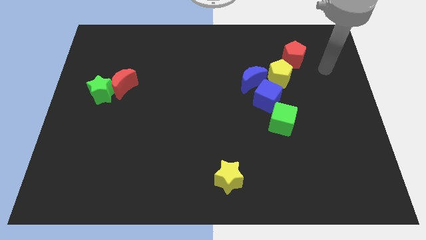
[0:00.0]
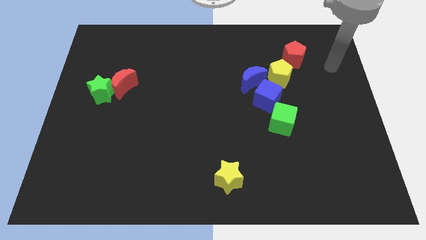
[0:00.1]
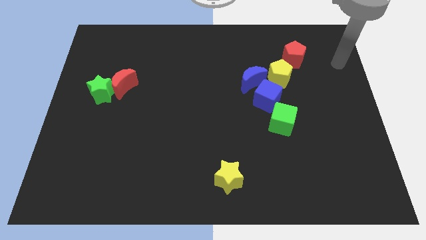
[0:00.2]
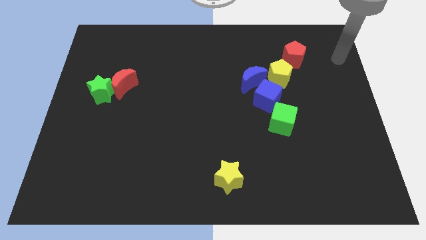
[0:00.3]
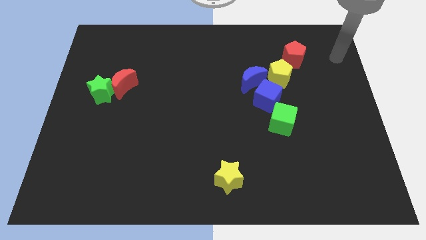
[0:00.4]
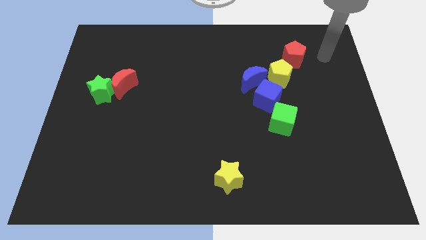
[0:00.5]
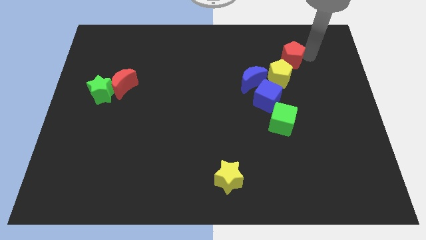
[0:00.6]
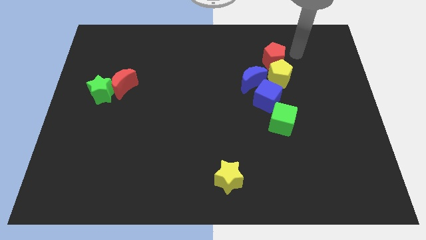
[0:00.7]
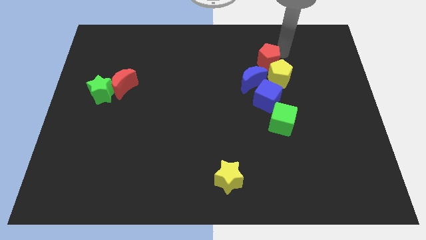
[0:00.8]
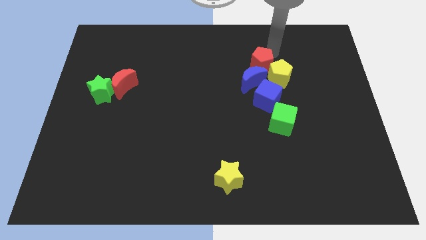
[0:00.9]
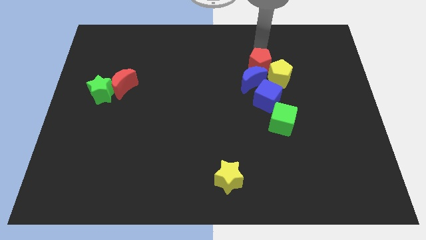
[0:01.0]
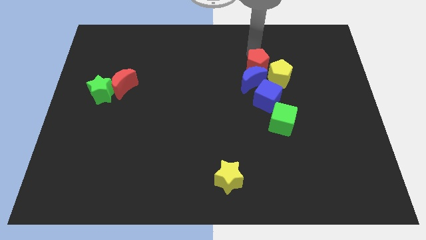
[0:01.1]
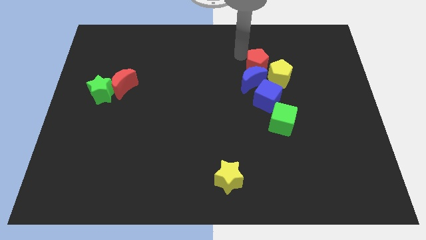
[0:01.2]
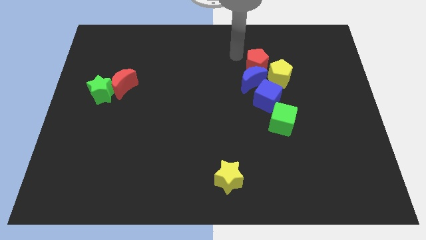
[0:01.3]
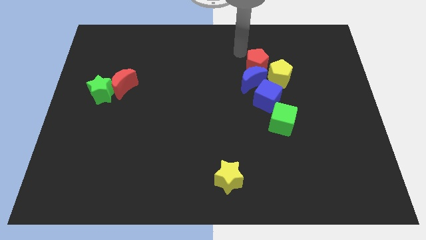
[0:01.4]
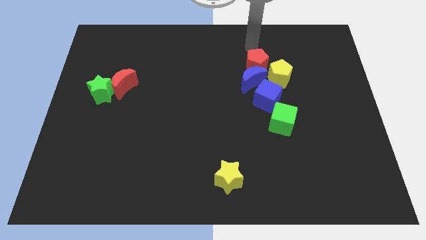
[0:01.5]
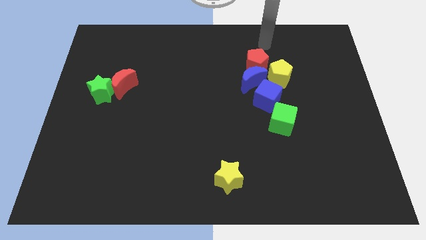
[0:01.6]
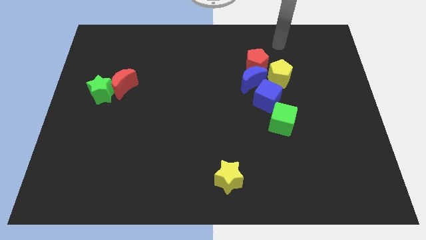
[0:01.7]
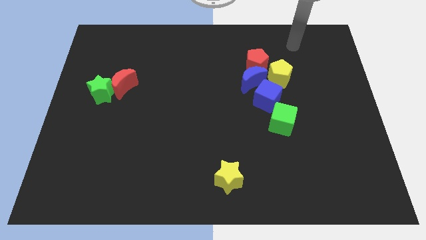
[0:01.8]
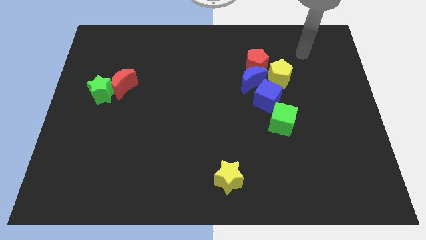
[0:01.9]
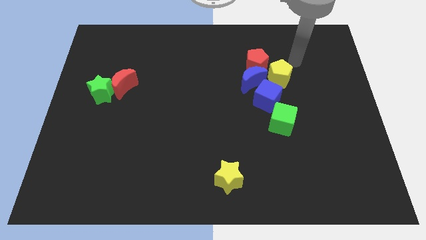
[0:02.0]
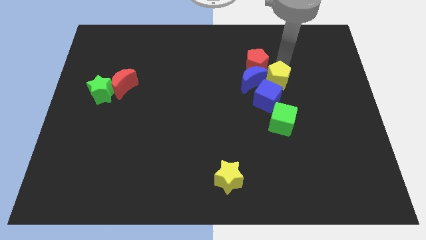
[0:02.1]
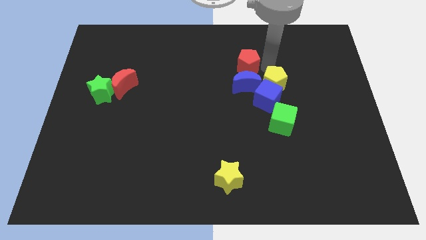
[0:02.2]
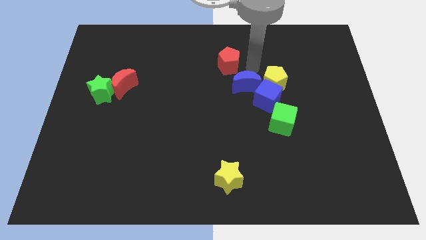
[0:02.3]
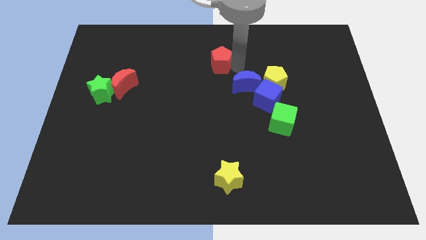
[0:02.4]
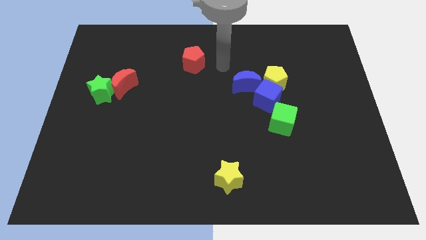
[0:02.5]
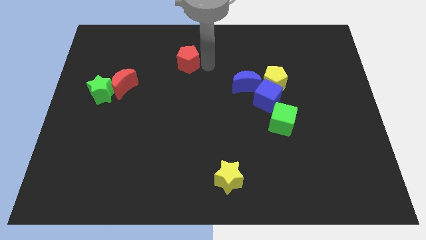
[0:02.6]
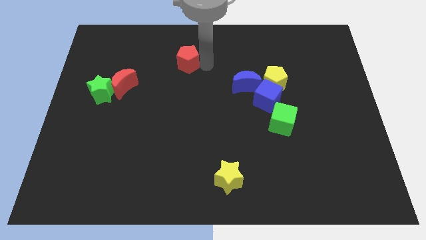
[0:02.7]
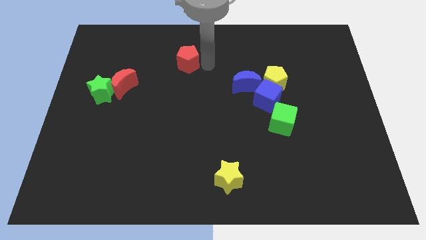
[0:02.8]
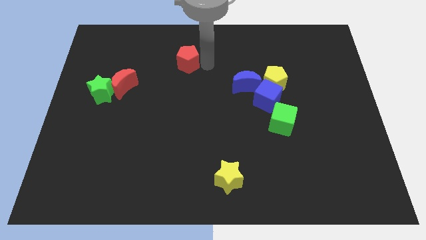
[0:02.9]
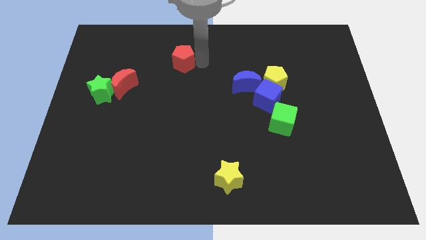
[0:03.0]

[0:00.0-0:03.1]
push the red pentagon to the left side of the board

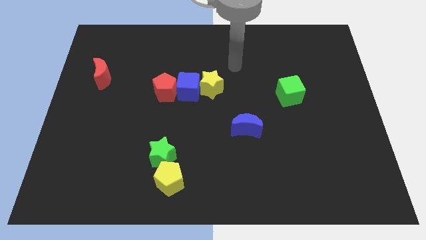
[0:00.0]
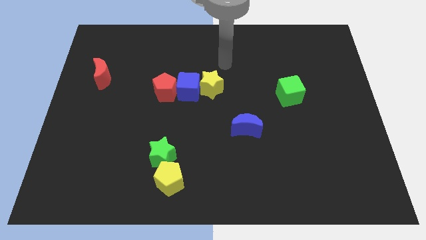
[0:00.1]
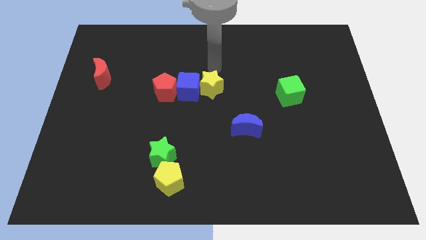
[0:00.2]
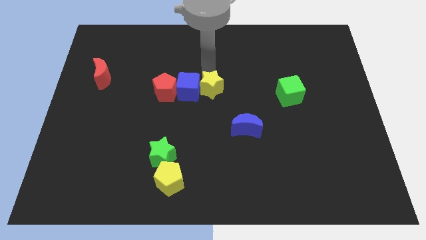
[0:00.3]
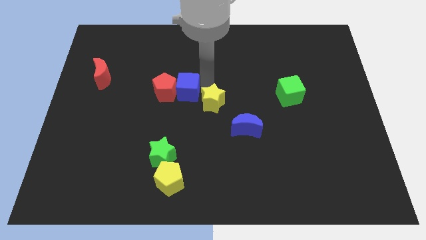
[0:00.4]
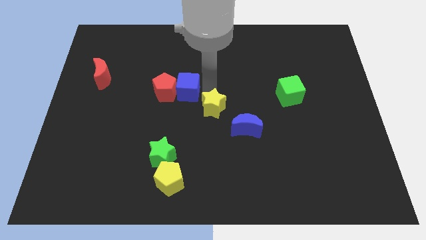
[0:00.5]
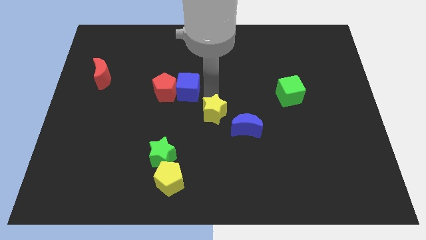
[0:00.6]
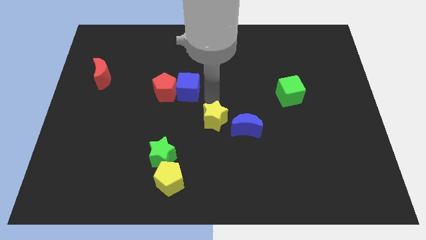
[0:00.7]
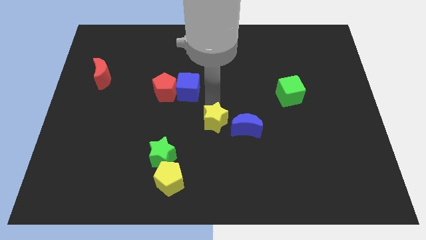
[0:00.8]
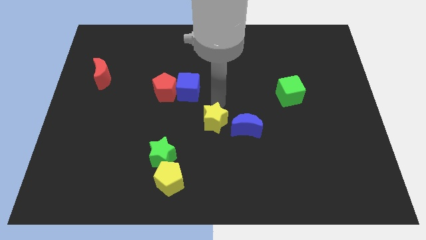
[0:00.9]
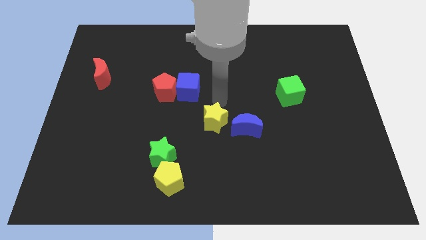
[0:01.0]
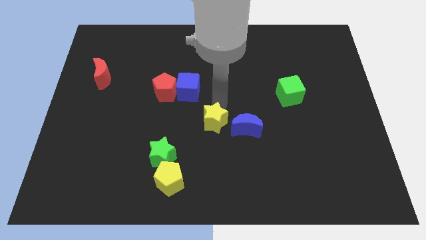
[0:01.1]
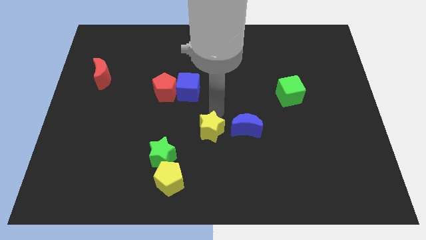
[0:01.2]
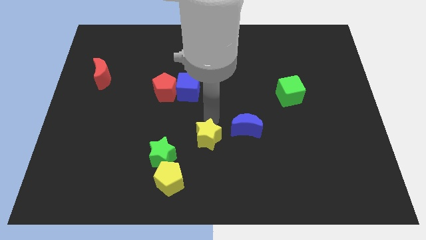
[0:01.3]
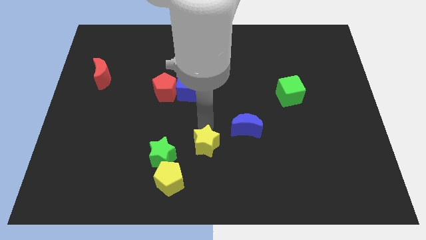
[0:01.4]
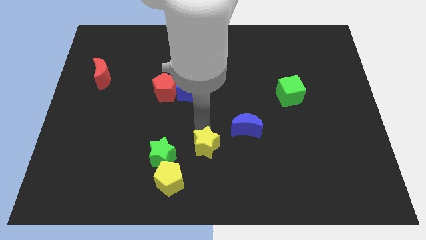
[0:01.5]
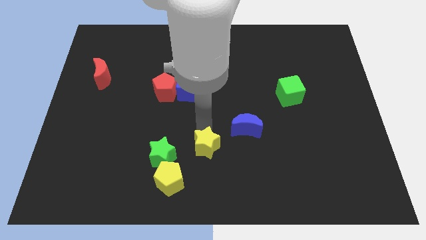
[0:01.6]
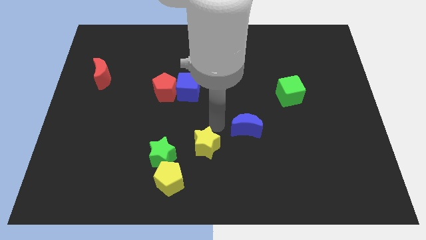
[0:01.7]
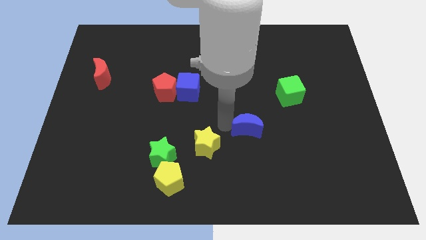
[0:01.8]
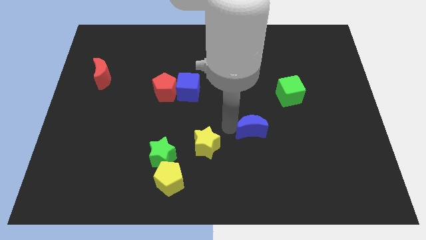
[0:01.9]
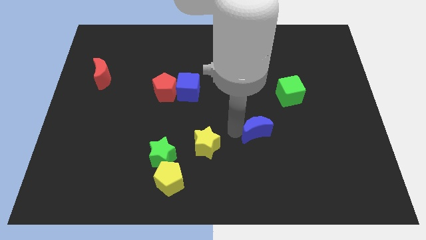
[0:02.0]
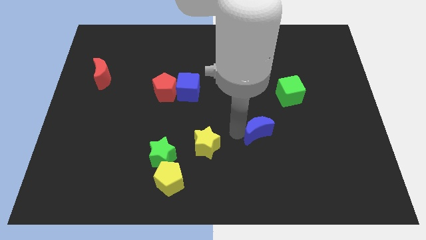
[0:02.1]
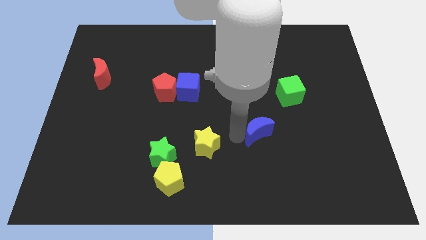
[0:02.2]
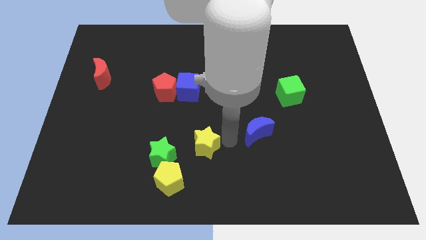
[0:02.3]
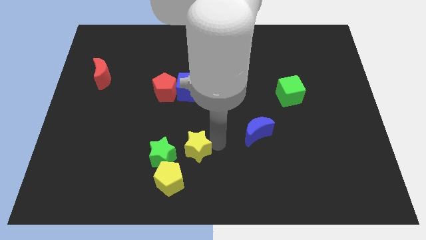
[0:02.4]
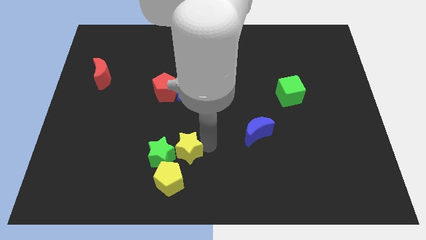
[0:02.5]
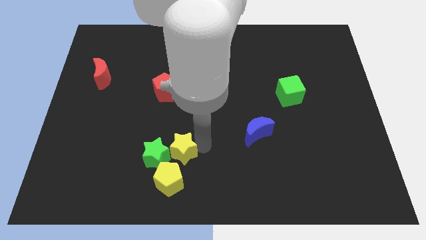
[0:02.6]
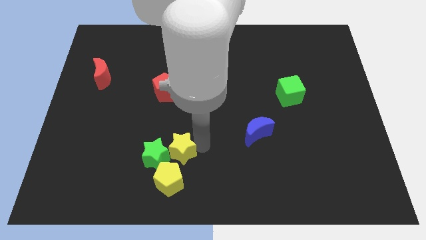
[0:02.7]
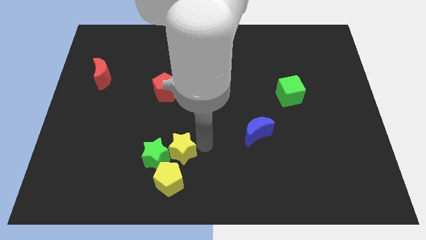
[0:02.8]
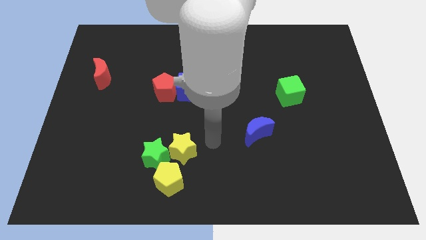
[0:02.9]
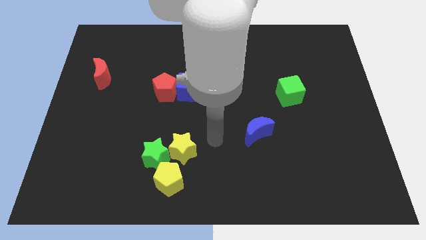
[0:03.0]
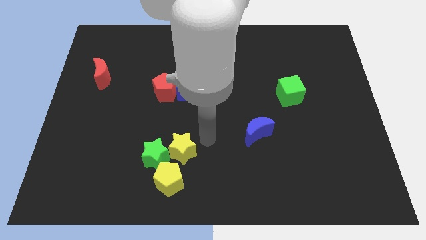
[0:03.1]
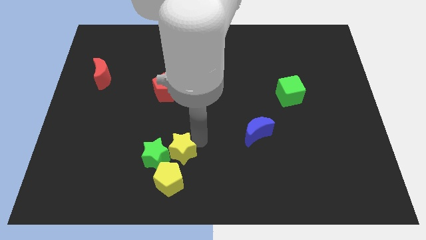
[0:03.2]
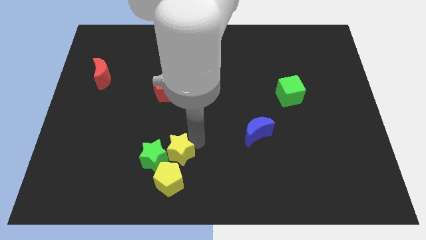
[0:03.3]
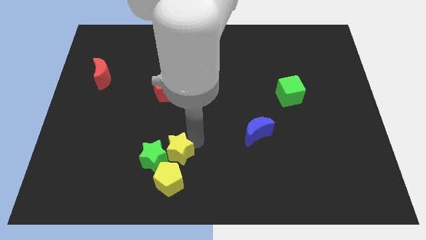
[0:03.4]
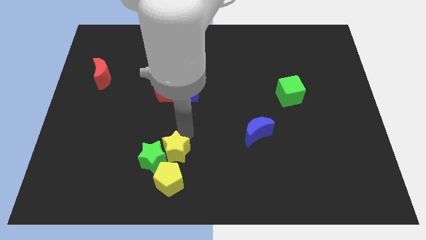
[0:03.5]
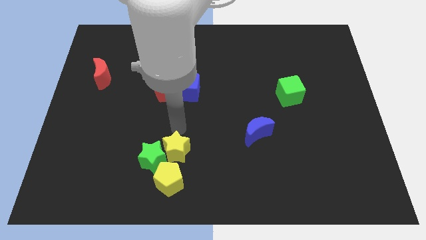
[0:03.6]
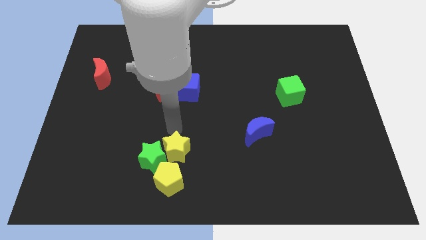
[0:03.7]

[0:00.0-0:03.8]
move yellow star into the green star

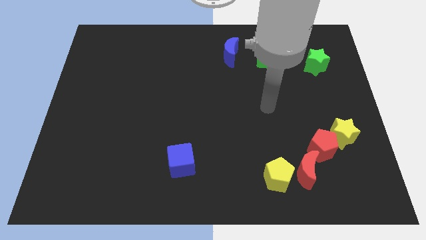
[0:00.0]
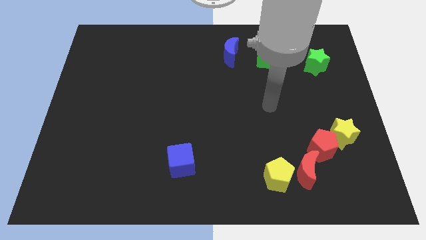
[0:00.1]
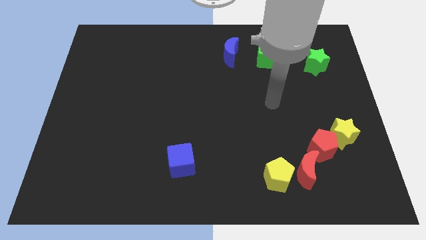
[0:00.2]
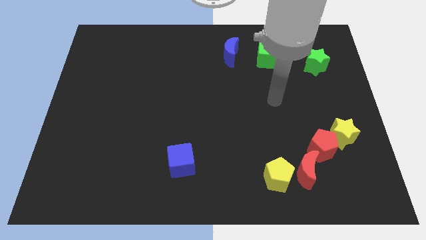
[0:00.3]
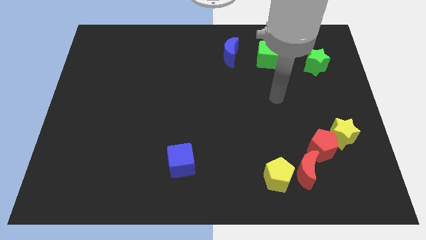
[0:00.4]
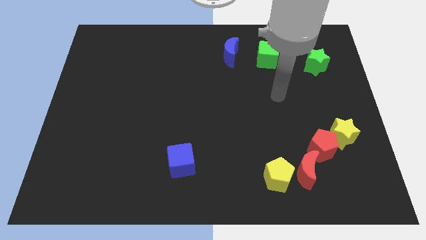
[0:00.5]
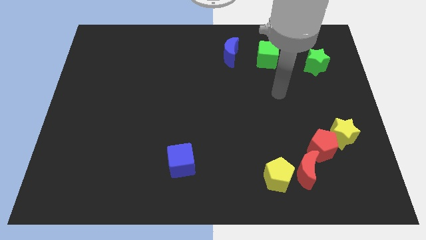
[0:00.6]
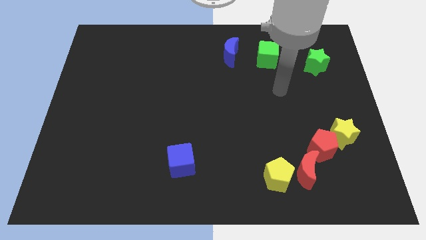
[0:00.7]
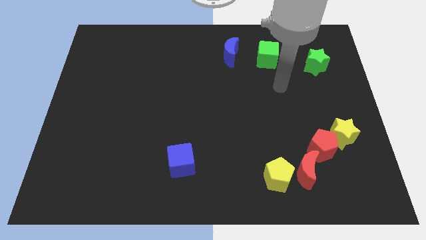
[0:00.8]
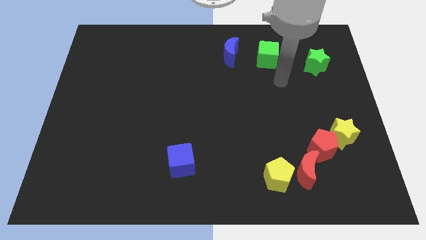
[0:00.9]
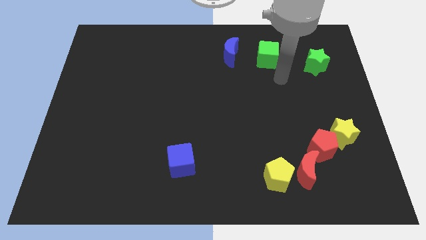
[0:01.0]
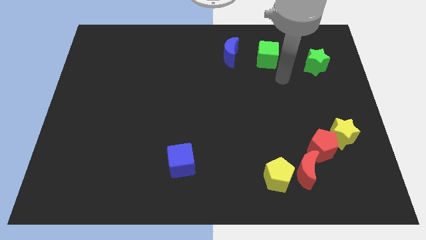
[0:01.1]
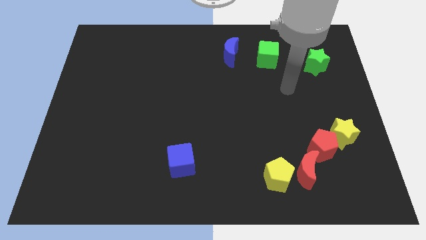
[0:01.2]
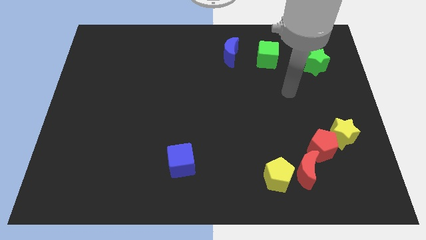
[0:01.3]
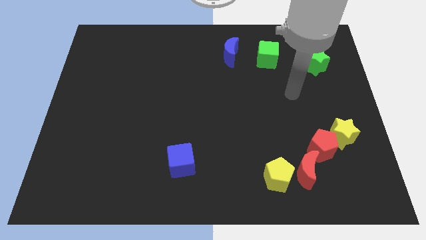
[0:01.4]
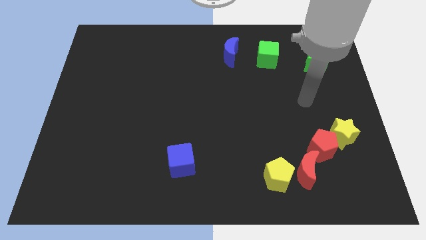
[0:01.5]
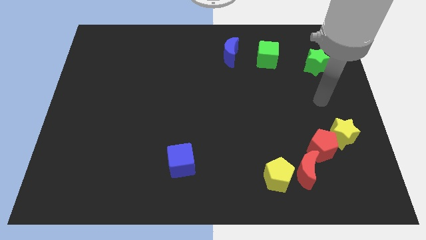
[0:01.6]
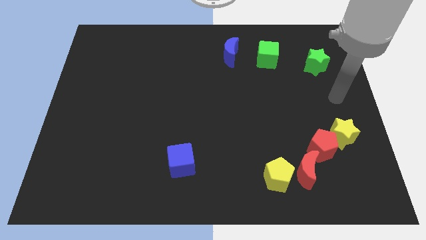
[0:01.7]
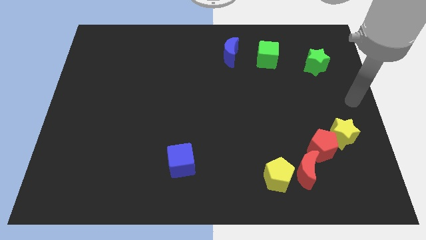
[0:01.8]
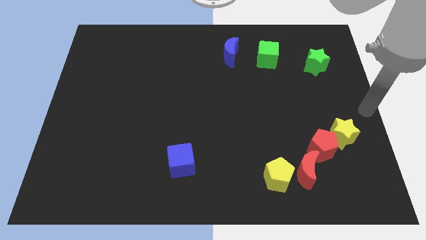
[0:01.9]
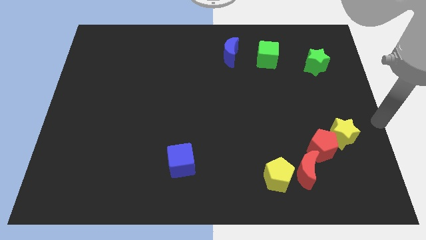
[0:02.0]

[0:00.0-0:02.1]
place your arm to the right center of the board
